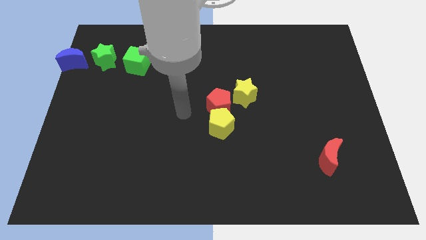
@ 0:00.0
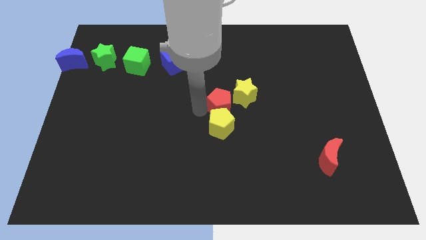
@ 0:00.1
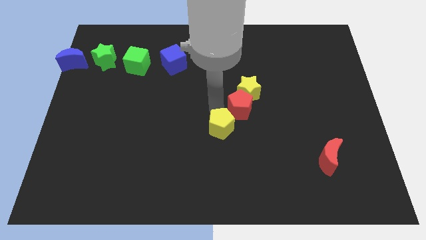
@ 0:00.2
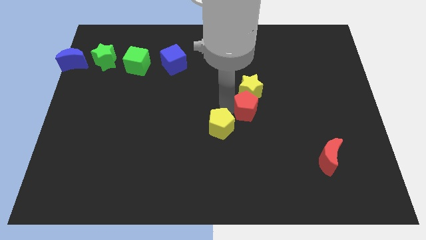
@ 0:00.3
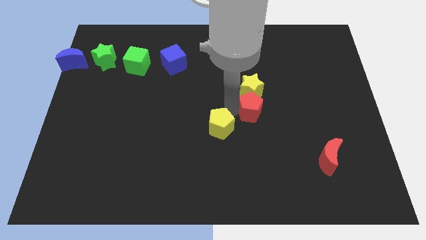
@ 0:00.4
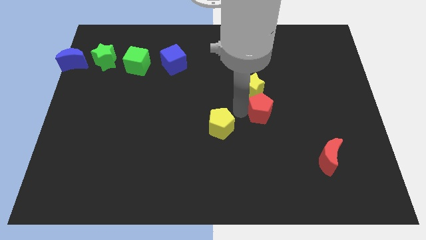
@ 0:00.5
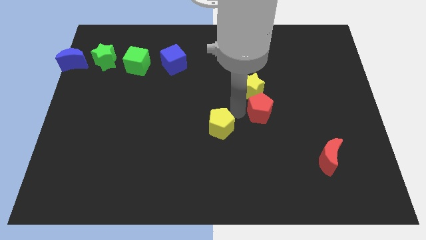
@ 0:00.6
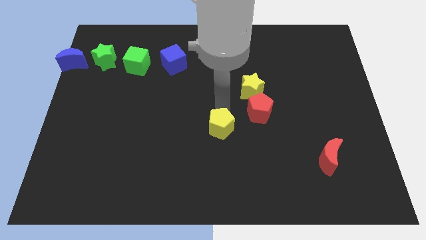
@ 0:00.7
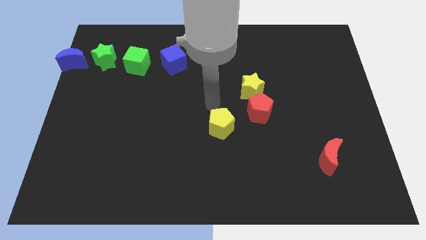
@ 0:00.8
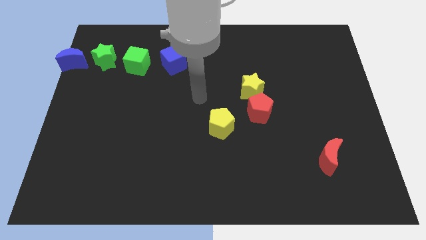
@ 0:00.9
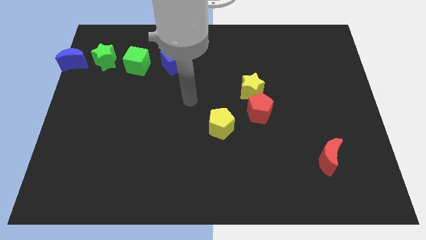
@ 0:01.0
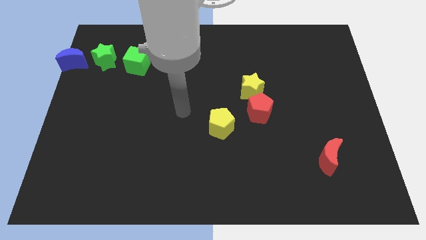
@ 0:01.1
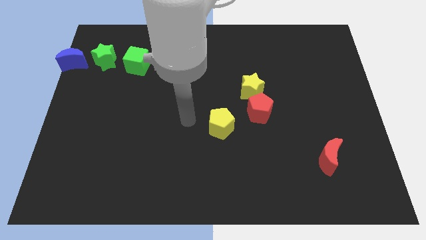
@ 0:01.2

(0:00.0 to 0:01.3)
push the red pentagon towards the right side of the board

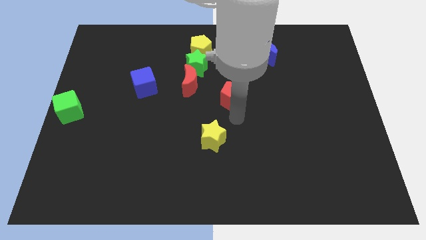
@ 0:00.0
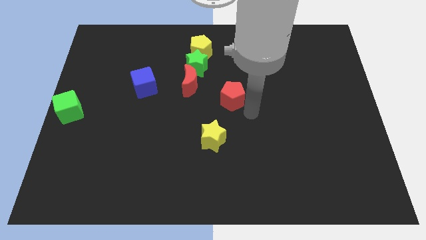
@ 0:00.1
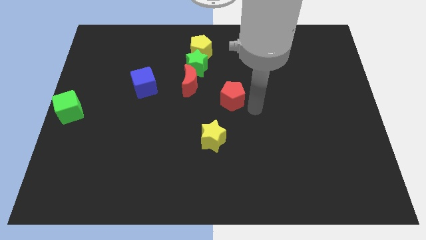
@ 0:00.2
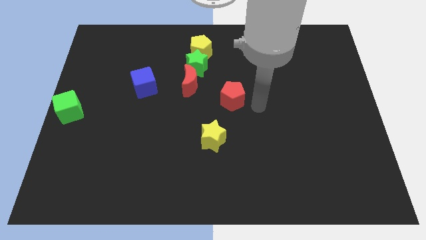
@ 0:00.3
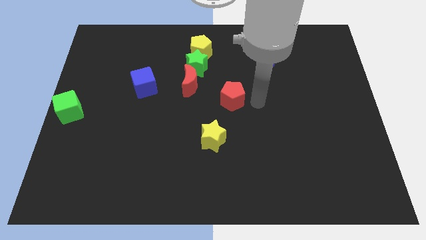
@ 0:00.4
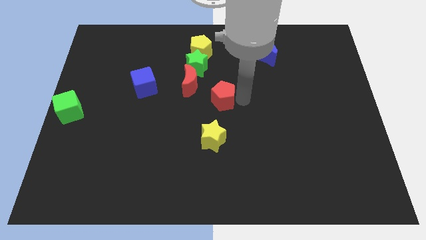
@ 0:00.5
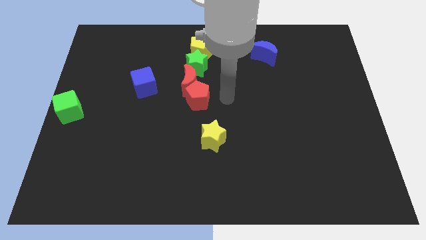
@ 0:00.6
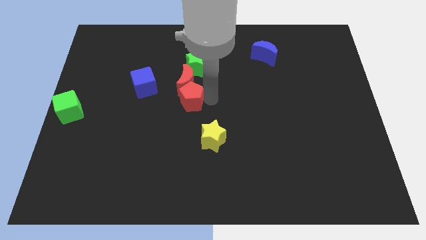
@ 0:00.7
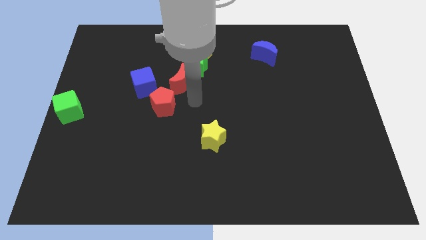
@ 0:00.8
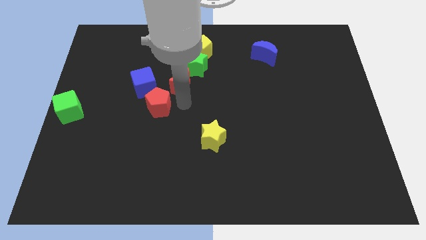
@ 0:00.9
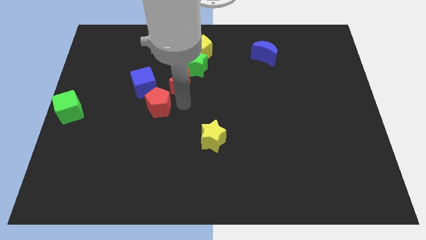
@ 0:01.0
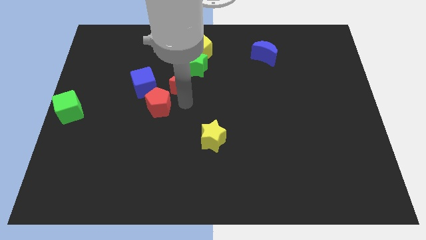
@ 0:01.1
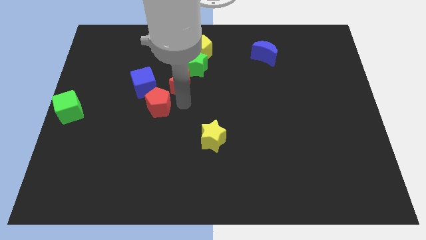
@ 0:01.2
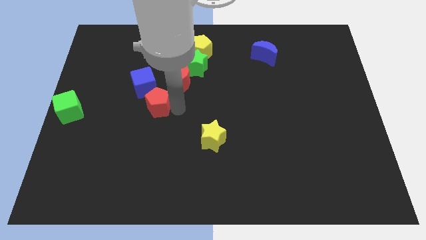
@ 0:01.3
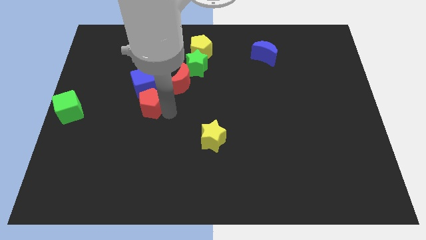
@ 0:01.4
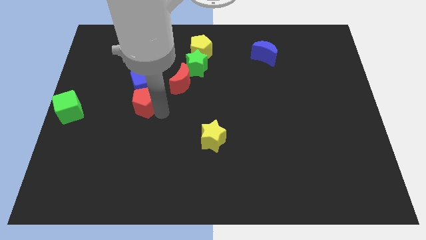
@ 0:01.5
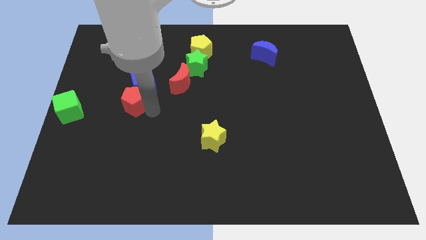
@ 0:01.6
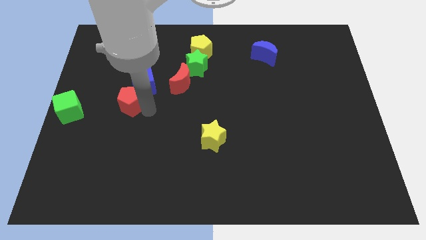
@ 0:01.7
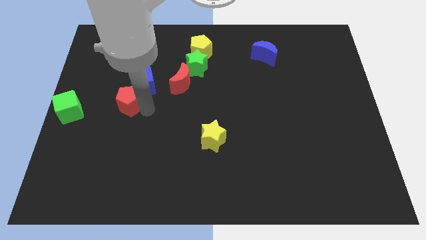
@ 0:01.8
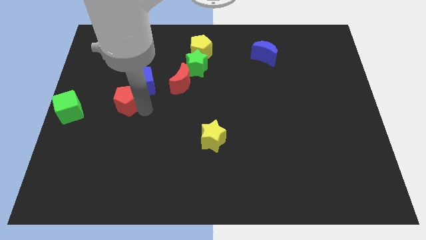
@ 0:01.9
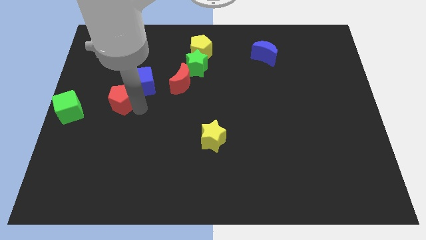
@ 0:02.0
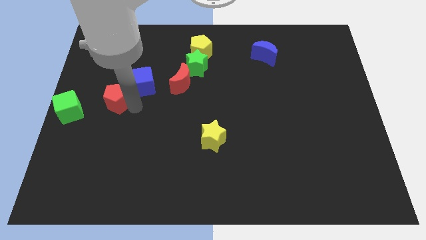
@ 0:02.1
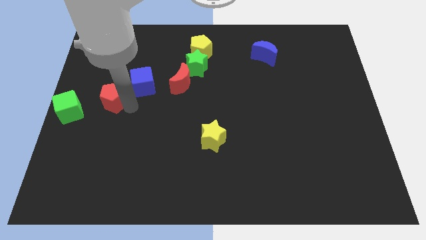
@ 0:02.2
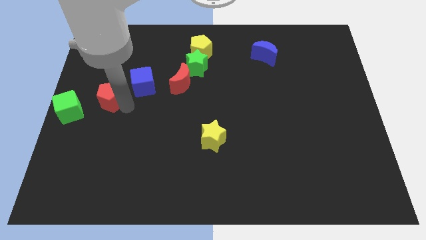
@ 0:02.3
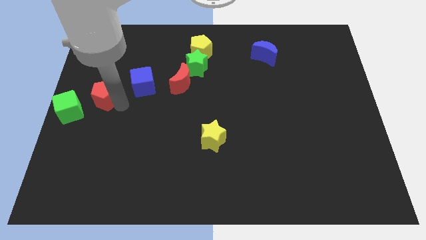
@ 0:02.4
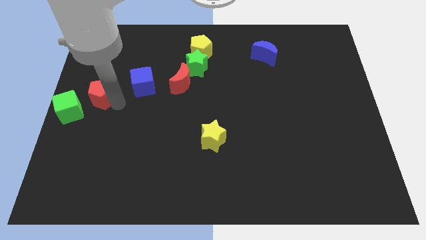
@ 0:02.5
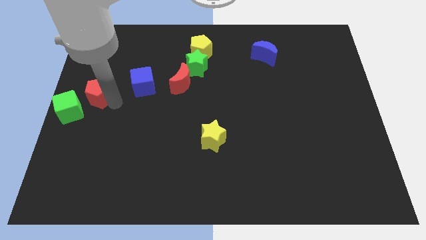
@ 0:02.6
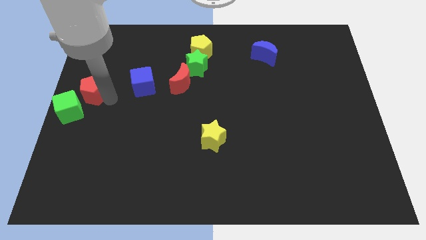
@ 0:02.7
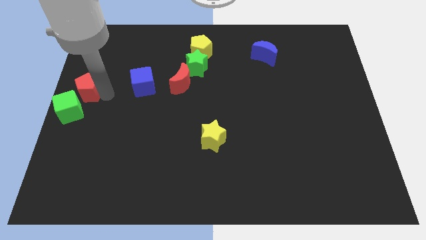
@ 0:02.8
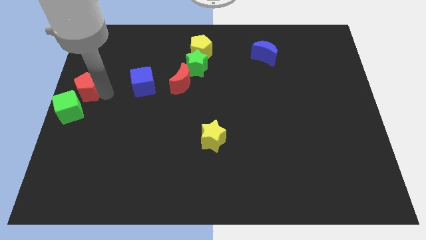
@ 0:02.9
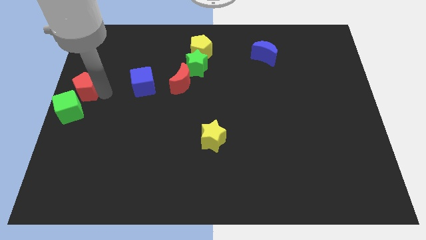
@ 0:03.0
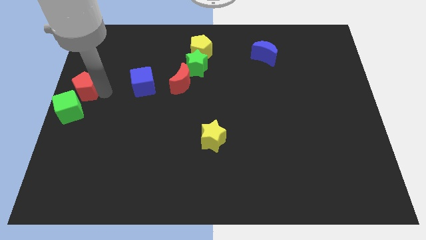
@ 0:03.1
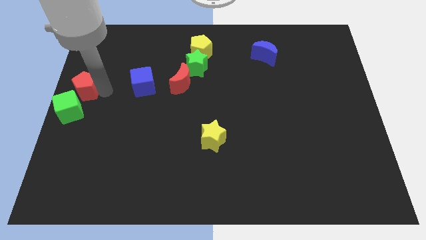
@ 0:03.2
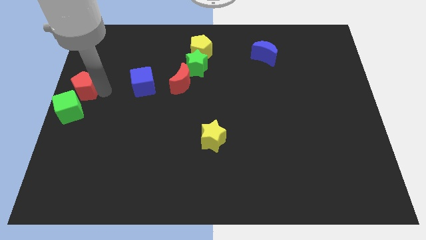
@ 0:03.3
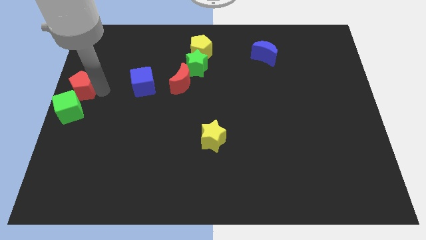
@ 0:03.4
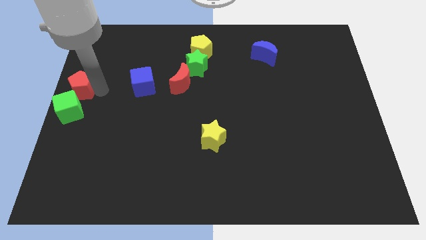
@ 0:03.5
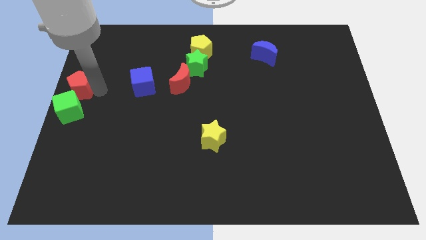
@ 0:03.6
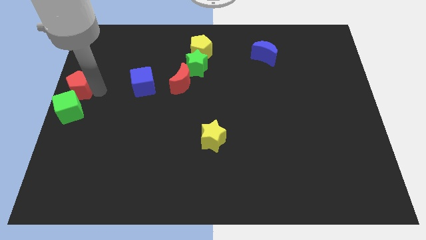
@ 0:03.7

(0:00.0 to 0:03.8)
move red pentagon towards green cube

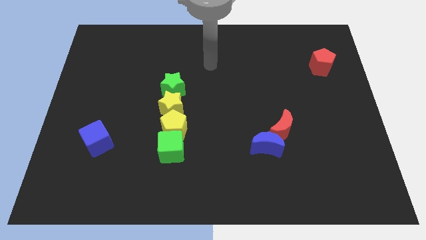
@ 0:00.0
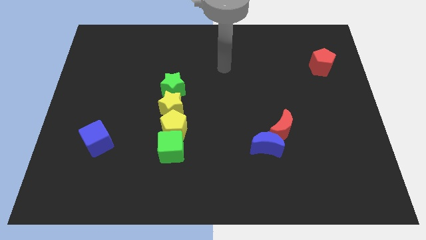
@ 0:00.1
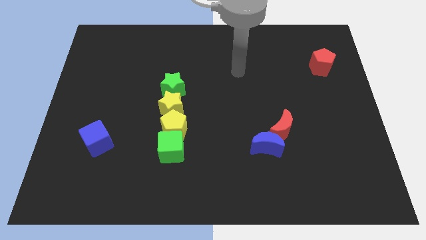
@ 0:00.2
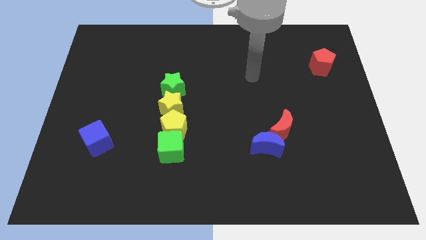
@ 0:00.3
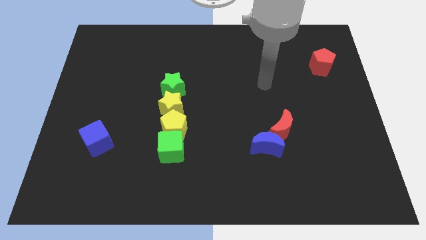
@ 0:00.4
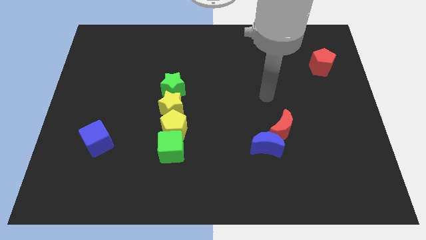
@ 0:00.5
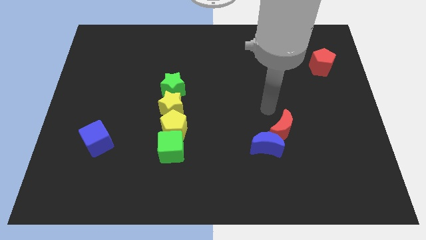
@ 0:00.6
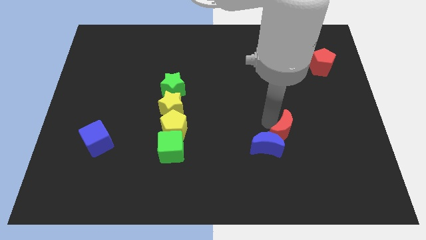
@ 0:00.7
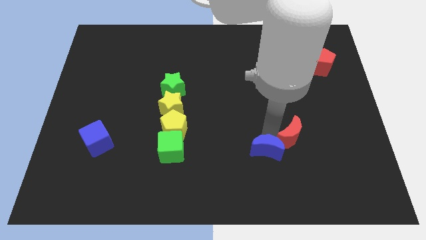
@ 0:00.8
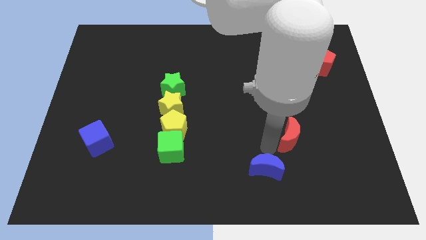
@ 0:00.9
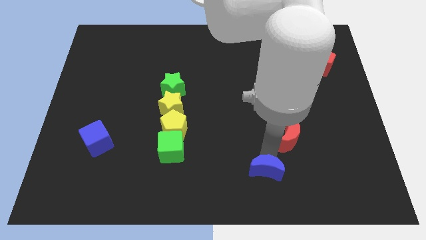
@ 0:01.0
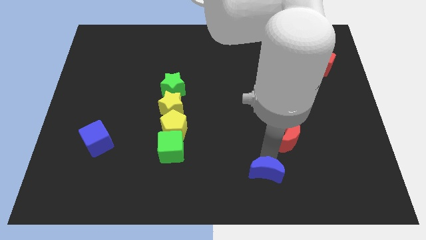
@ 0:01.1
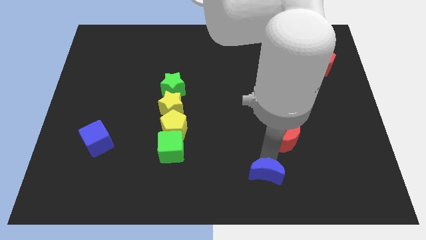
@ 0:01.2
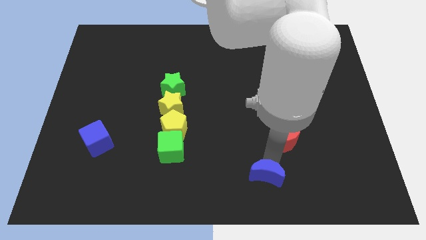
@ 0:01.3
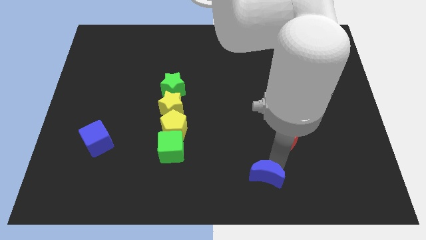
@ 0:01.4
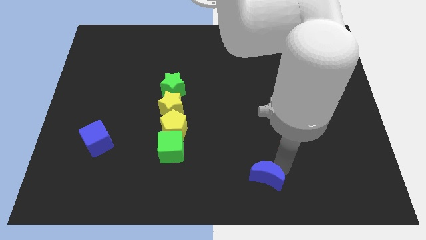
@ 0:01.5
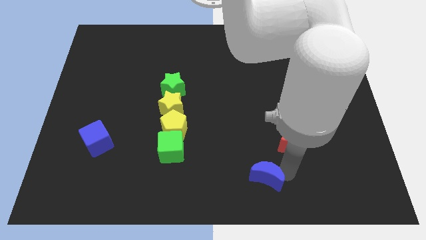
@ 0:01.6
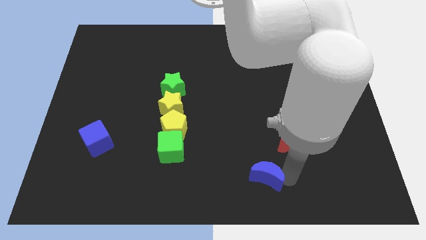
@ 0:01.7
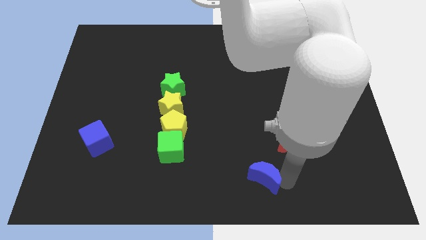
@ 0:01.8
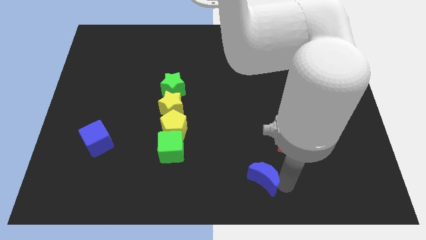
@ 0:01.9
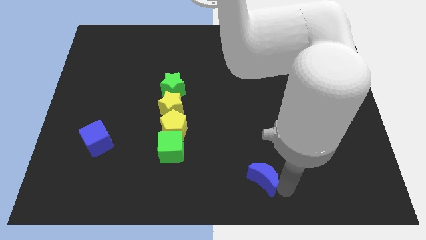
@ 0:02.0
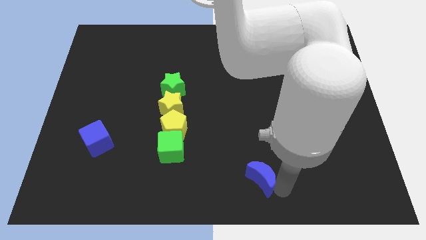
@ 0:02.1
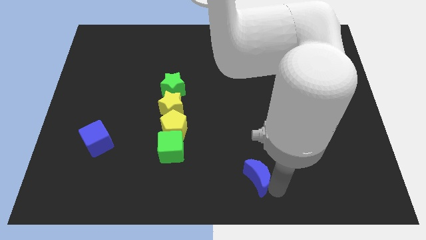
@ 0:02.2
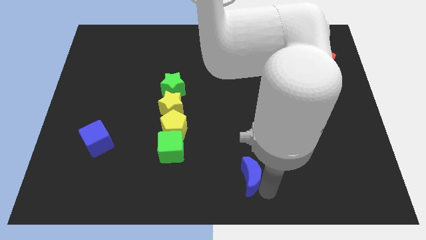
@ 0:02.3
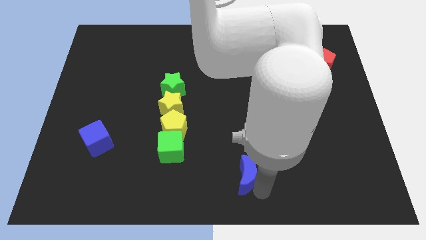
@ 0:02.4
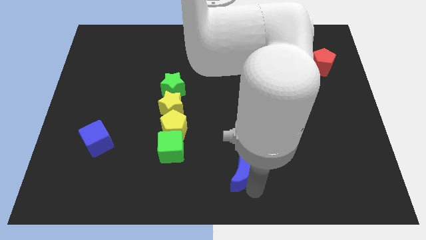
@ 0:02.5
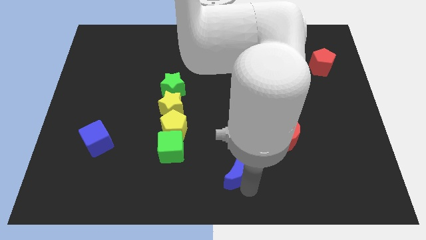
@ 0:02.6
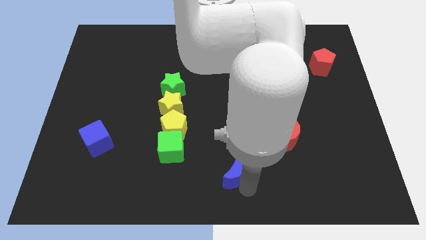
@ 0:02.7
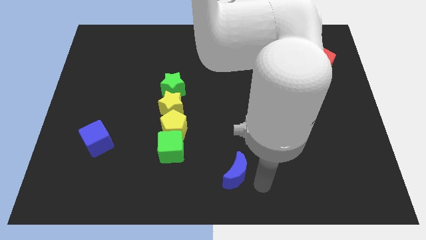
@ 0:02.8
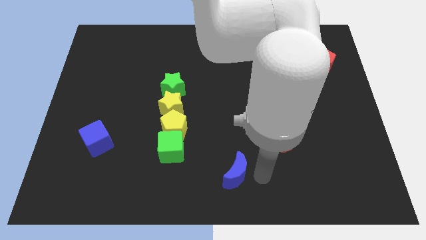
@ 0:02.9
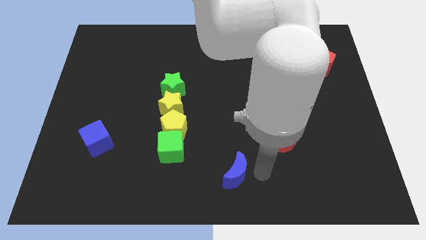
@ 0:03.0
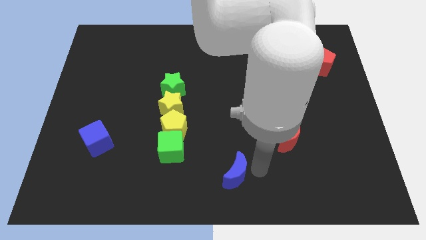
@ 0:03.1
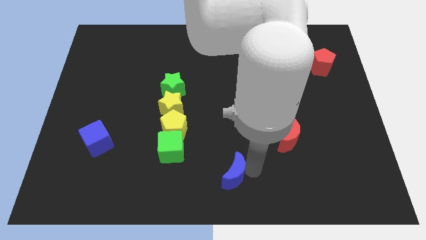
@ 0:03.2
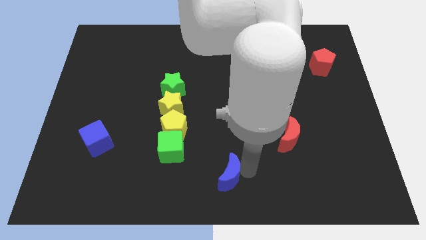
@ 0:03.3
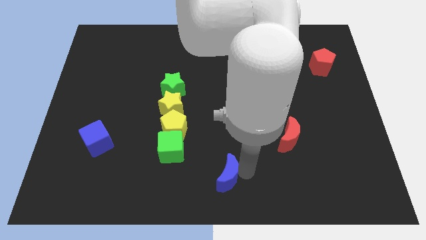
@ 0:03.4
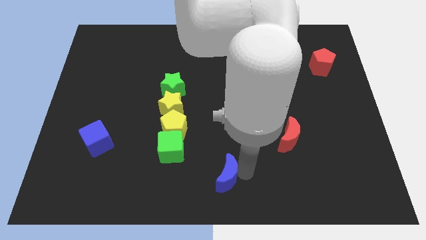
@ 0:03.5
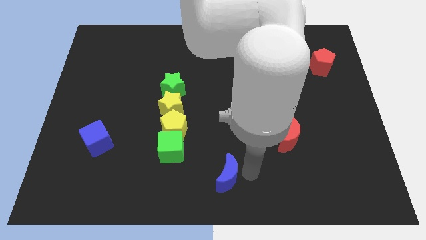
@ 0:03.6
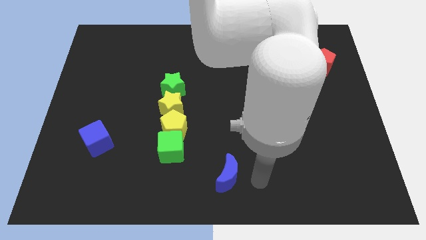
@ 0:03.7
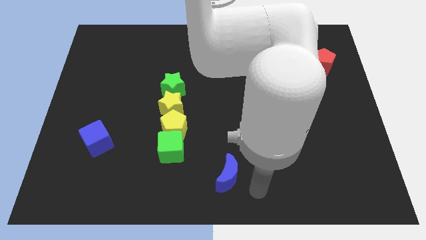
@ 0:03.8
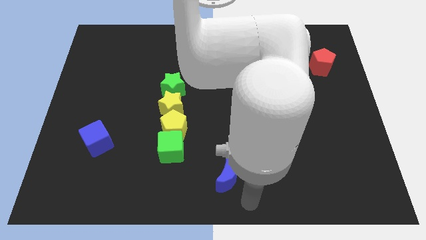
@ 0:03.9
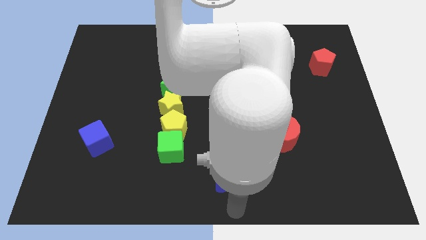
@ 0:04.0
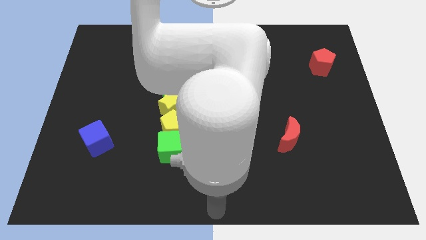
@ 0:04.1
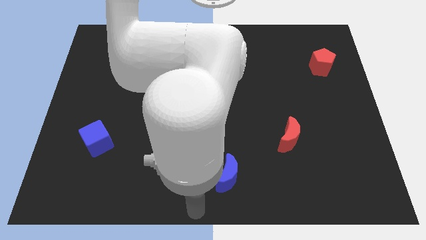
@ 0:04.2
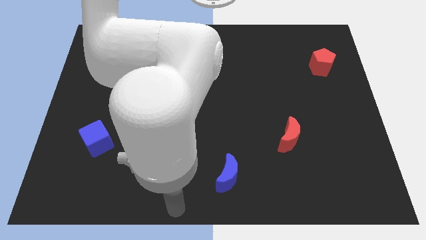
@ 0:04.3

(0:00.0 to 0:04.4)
separate the blue crescent from the bottom side of the red crescent
